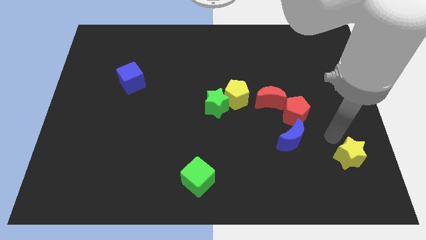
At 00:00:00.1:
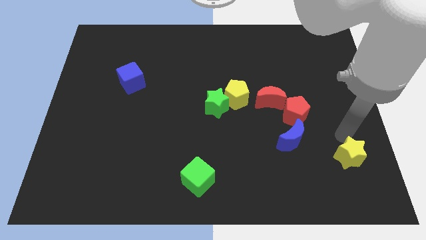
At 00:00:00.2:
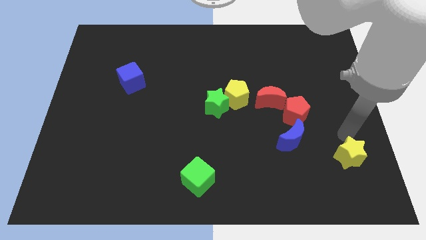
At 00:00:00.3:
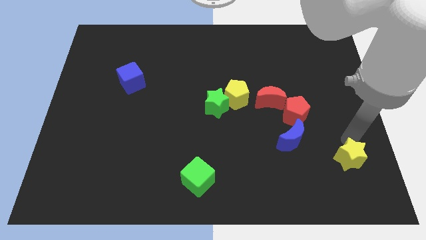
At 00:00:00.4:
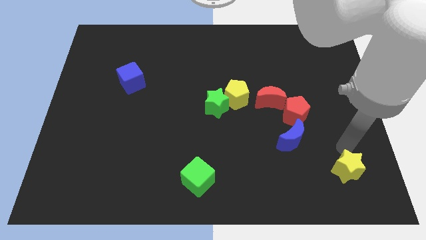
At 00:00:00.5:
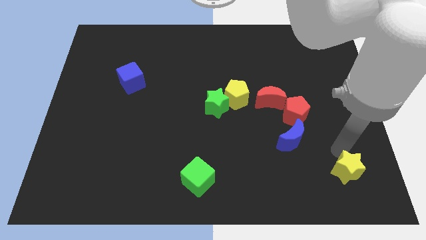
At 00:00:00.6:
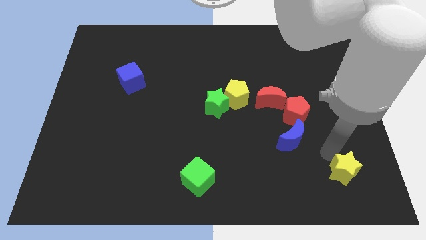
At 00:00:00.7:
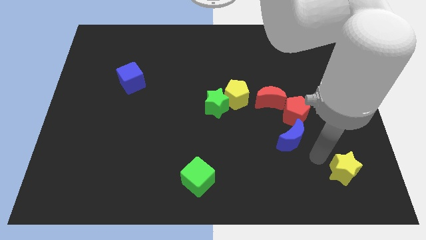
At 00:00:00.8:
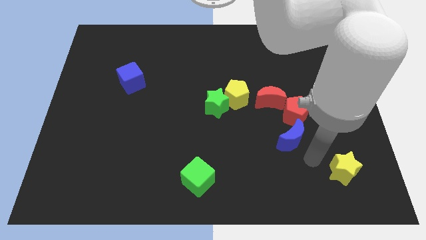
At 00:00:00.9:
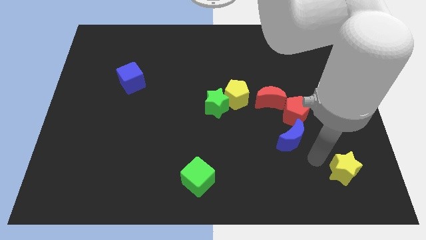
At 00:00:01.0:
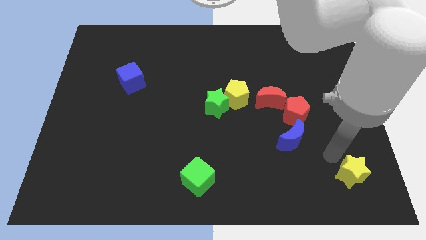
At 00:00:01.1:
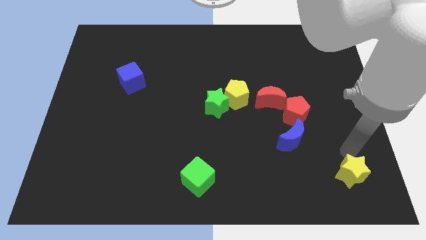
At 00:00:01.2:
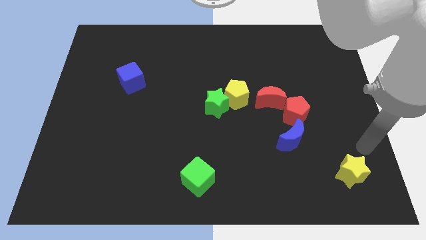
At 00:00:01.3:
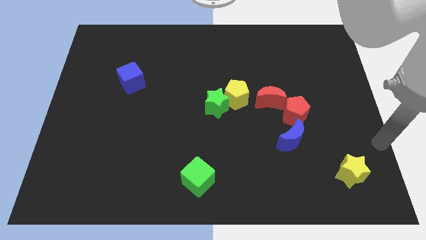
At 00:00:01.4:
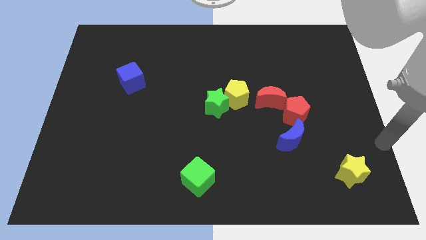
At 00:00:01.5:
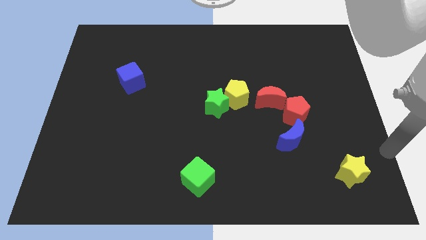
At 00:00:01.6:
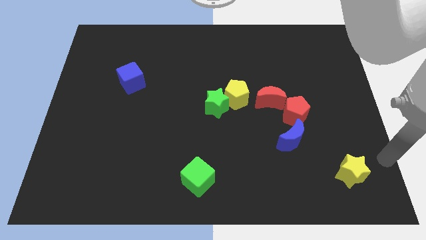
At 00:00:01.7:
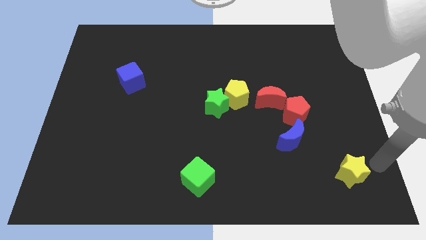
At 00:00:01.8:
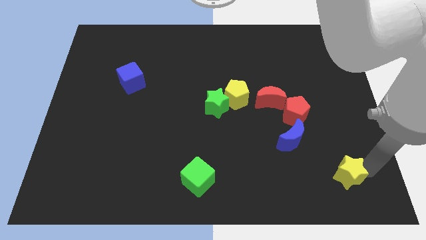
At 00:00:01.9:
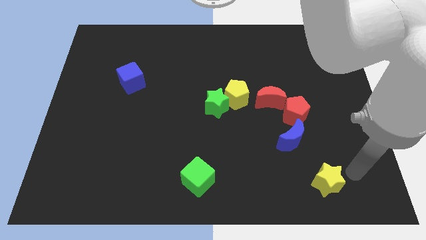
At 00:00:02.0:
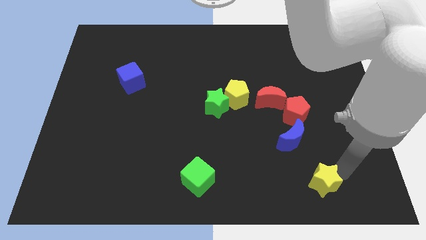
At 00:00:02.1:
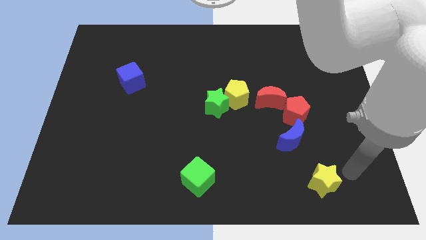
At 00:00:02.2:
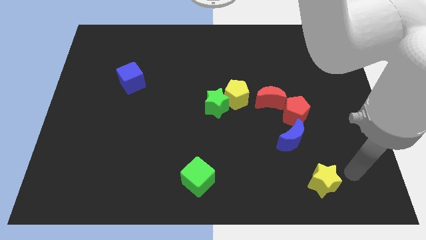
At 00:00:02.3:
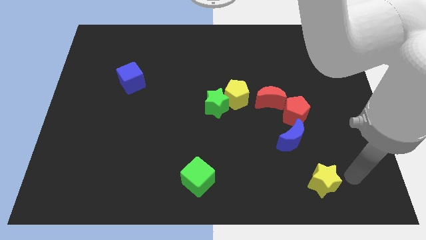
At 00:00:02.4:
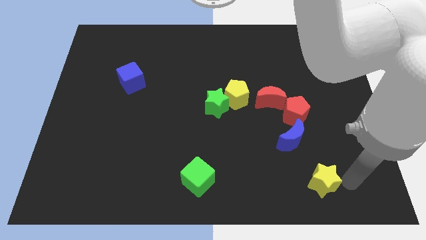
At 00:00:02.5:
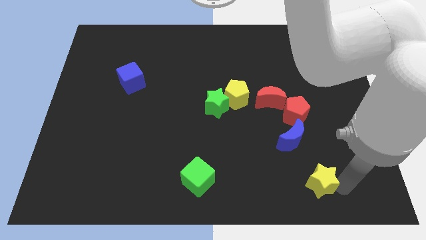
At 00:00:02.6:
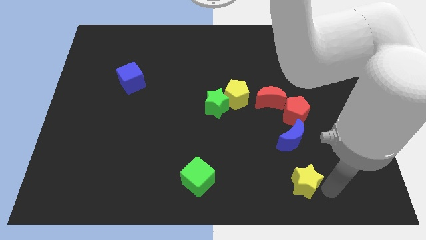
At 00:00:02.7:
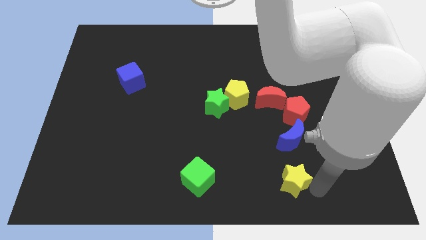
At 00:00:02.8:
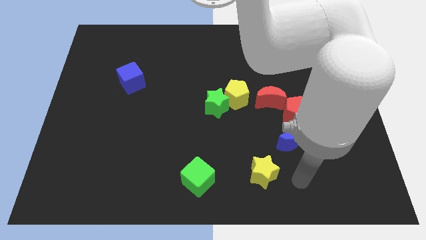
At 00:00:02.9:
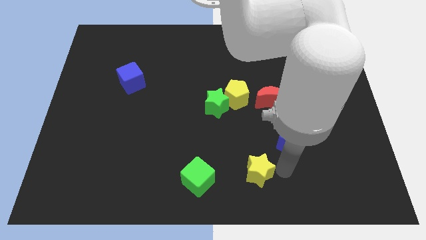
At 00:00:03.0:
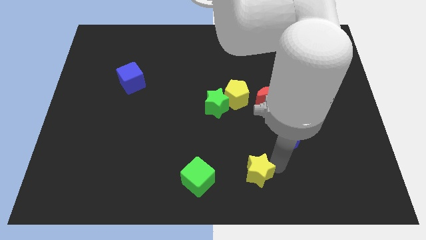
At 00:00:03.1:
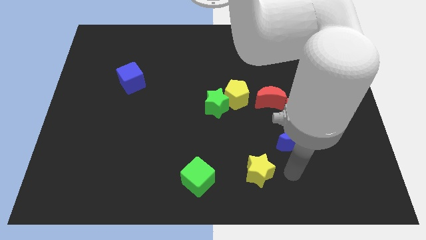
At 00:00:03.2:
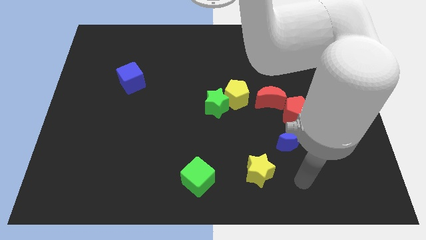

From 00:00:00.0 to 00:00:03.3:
push the yellow star towards diagonal to the blue crescent

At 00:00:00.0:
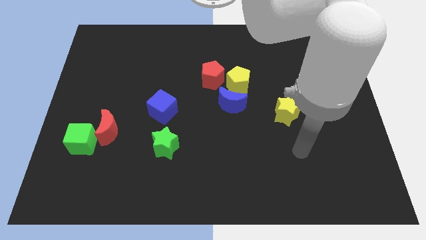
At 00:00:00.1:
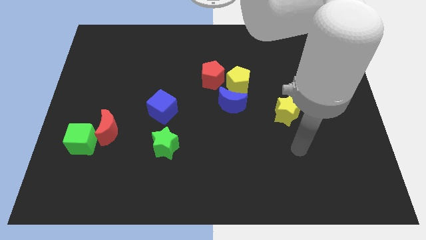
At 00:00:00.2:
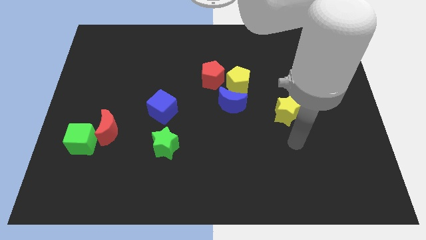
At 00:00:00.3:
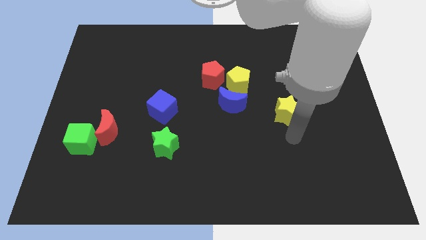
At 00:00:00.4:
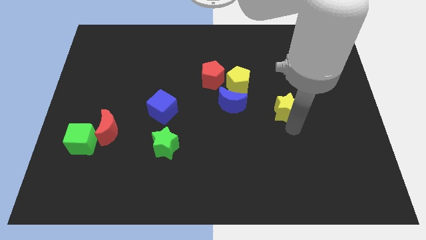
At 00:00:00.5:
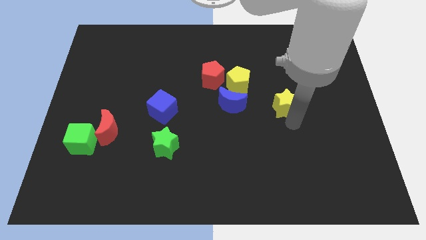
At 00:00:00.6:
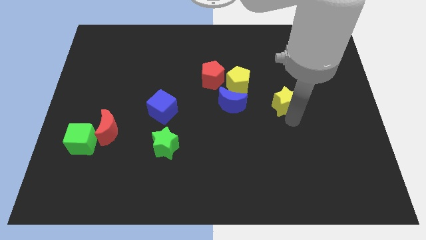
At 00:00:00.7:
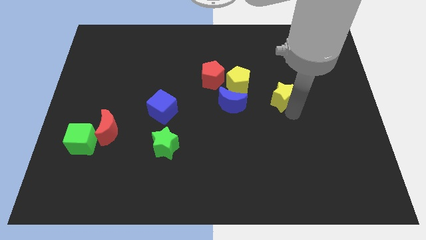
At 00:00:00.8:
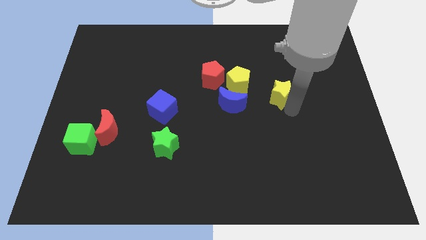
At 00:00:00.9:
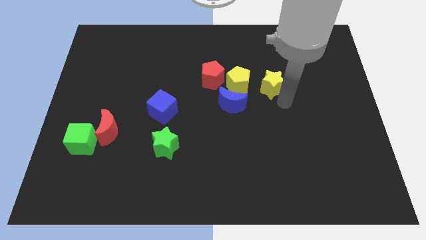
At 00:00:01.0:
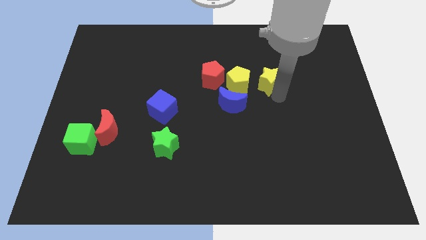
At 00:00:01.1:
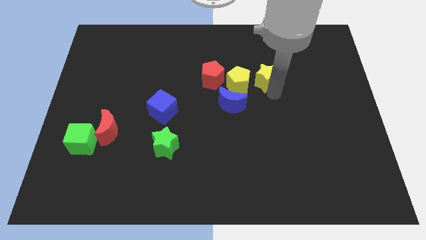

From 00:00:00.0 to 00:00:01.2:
place the yellow star to right of the yellow pentagon

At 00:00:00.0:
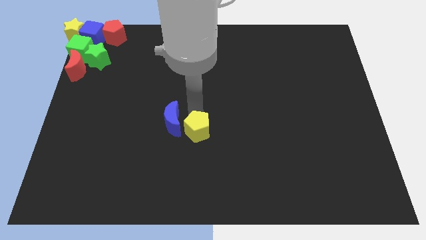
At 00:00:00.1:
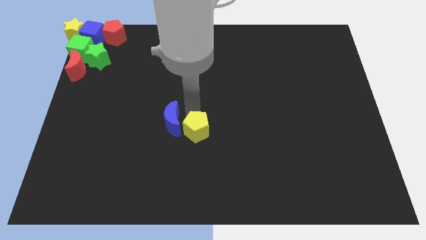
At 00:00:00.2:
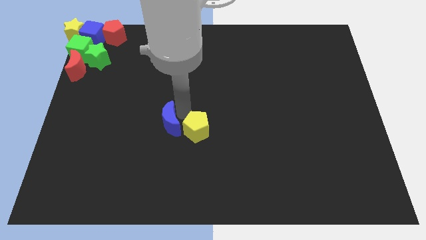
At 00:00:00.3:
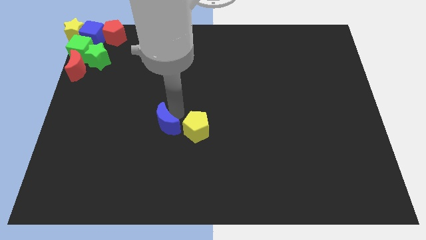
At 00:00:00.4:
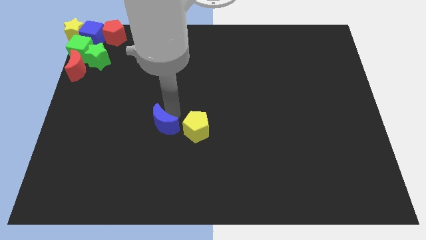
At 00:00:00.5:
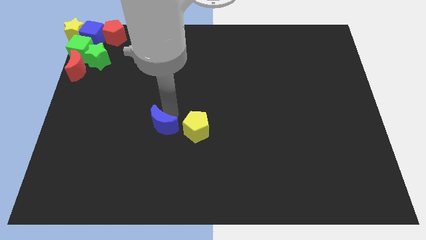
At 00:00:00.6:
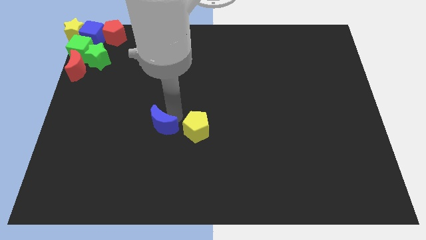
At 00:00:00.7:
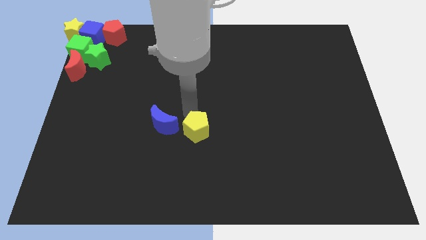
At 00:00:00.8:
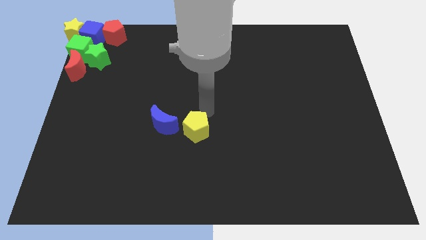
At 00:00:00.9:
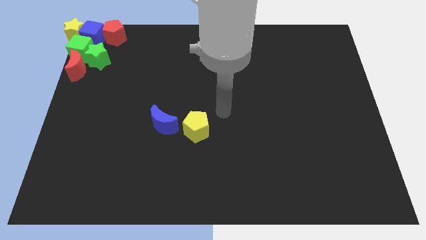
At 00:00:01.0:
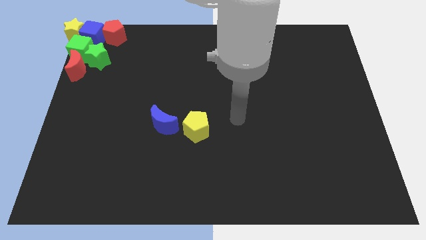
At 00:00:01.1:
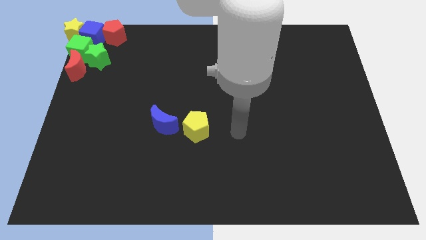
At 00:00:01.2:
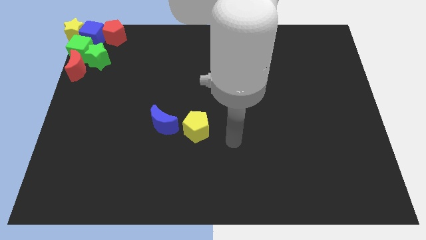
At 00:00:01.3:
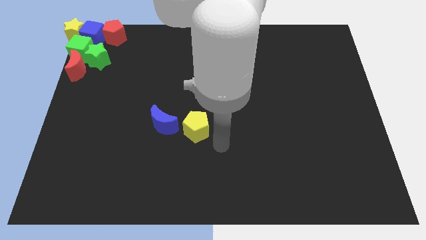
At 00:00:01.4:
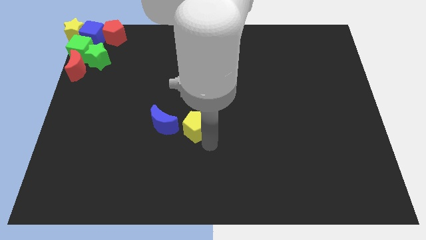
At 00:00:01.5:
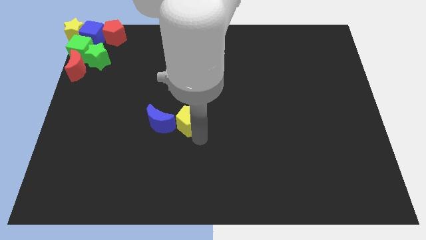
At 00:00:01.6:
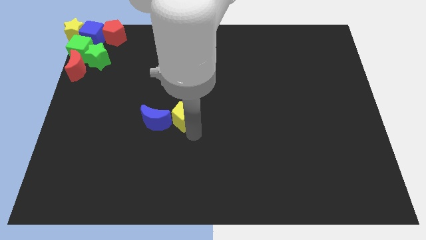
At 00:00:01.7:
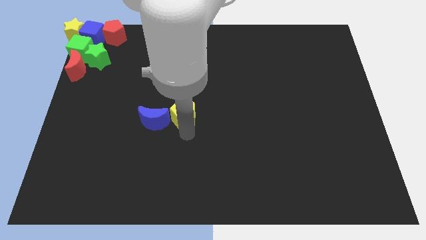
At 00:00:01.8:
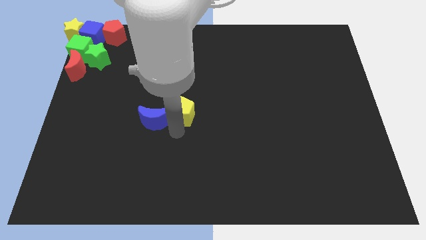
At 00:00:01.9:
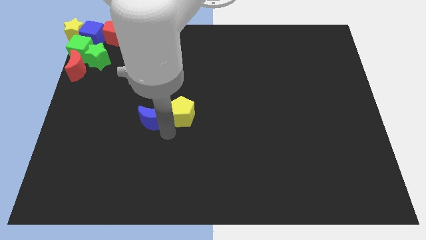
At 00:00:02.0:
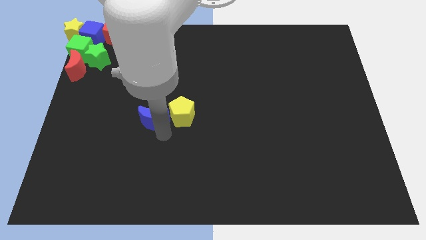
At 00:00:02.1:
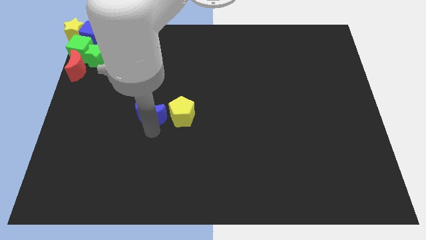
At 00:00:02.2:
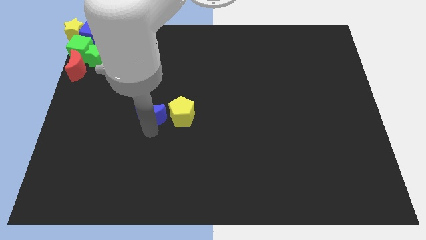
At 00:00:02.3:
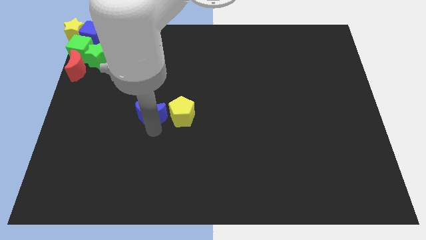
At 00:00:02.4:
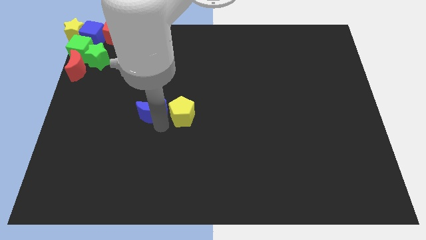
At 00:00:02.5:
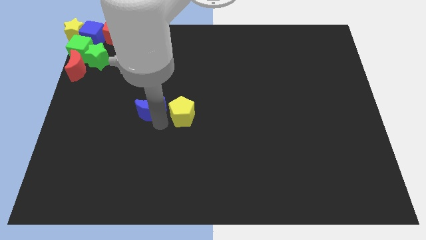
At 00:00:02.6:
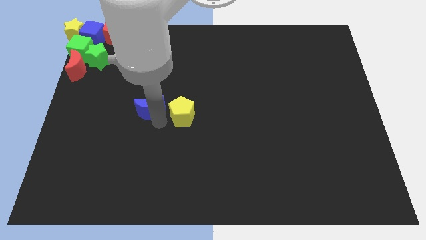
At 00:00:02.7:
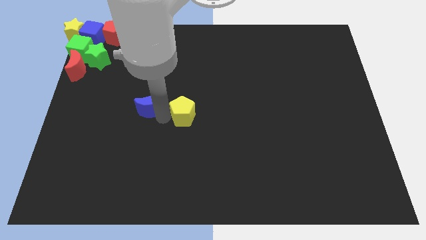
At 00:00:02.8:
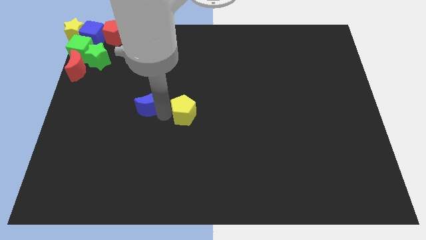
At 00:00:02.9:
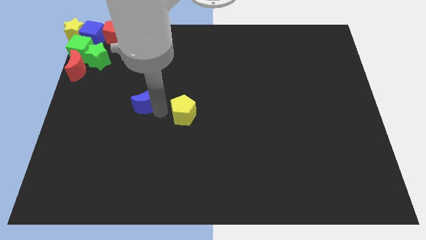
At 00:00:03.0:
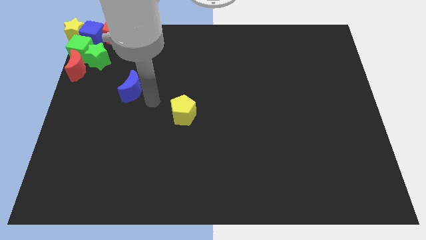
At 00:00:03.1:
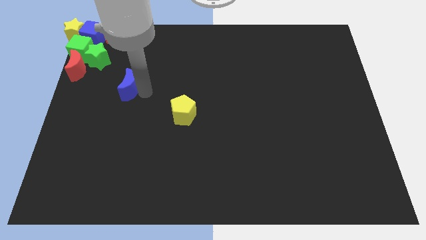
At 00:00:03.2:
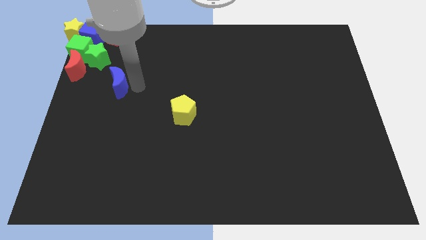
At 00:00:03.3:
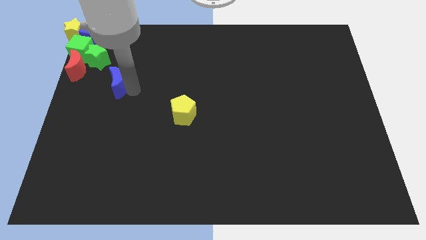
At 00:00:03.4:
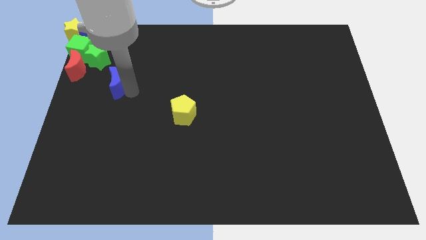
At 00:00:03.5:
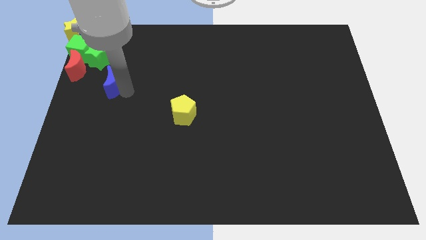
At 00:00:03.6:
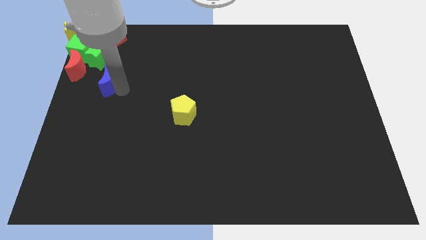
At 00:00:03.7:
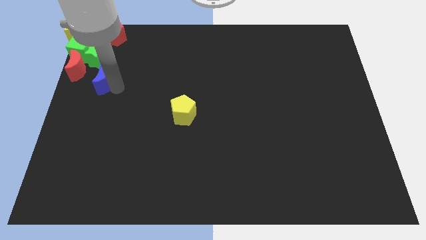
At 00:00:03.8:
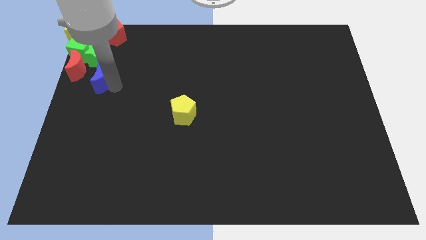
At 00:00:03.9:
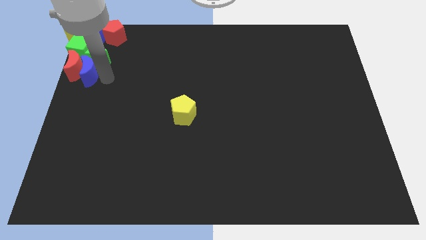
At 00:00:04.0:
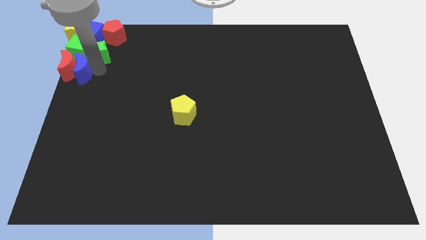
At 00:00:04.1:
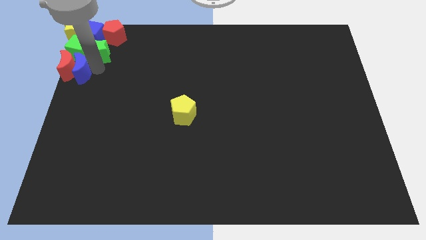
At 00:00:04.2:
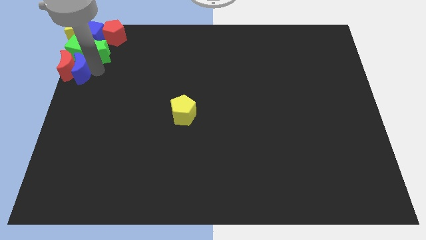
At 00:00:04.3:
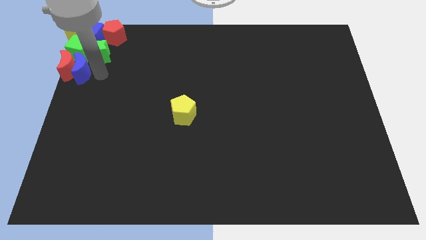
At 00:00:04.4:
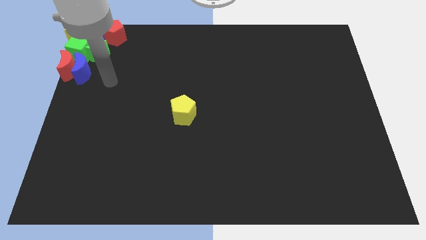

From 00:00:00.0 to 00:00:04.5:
place blue crescent to the right of red crescent
